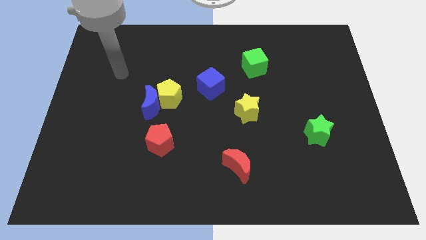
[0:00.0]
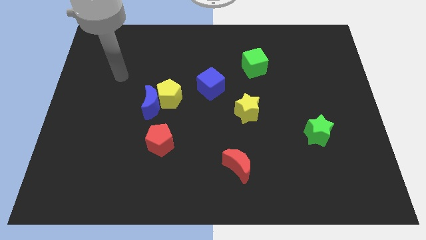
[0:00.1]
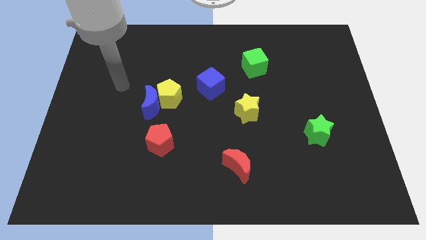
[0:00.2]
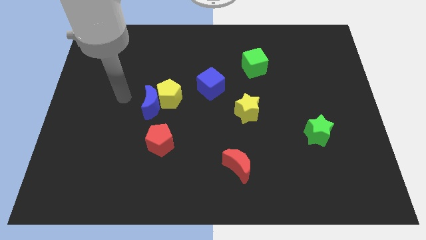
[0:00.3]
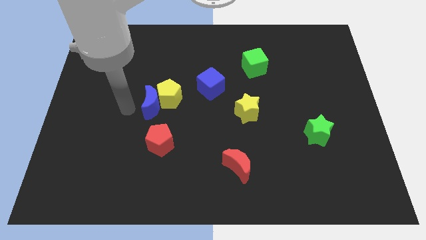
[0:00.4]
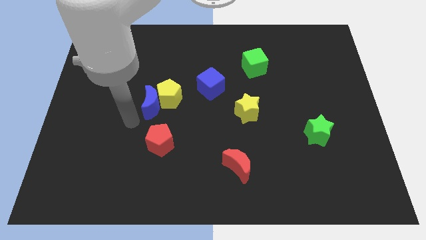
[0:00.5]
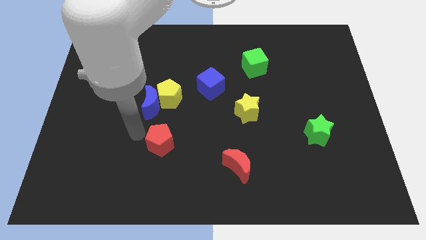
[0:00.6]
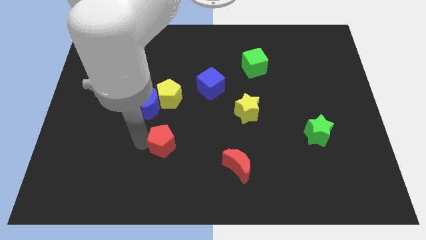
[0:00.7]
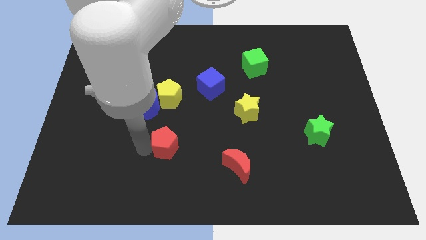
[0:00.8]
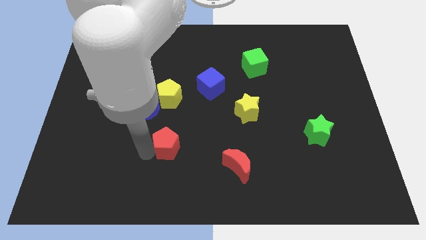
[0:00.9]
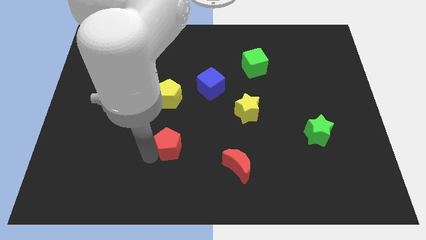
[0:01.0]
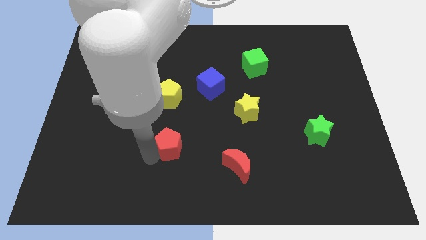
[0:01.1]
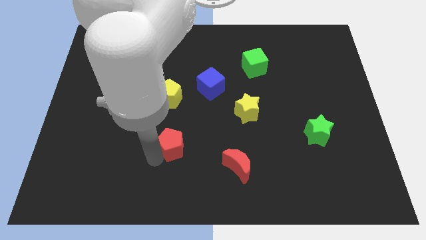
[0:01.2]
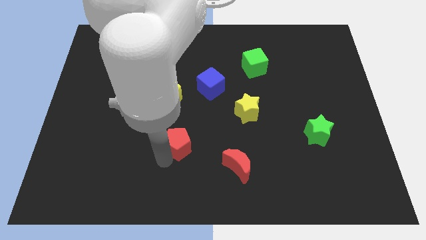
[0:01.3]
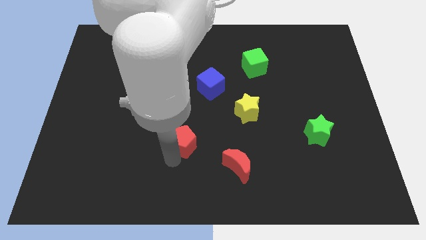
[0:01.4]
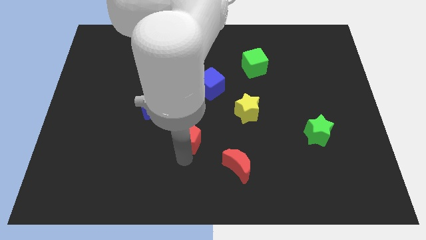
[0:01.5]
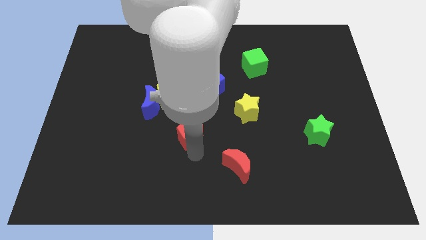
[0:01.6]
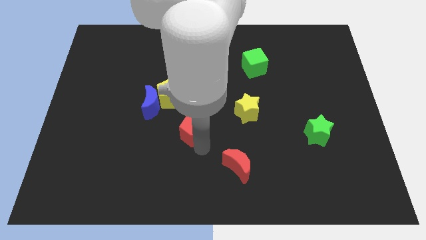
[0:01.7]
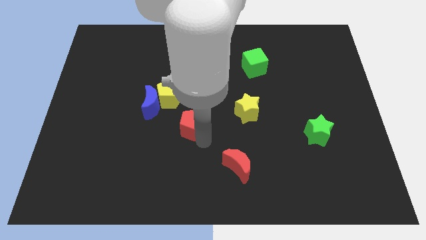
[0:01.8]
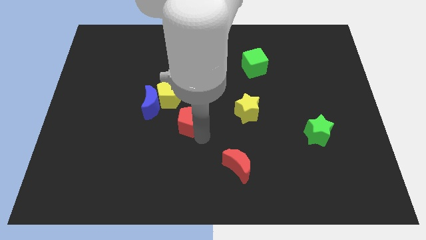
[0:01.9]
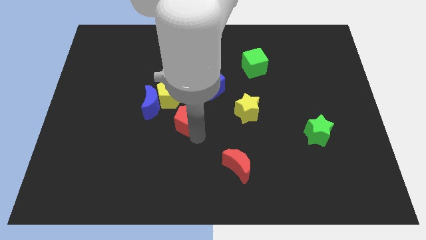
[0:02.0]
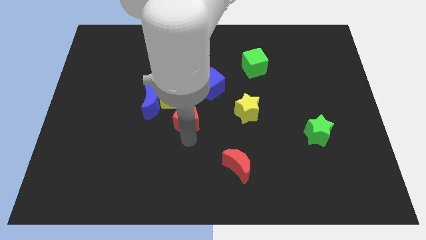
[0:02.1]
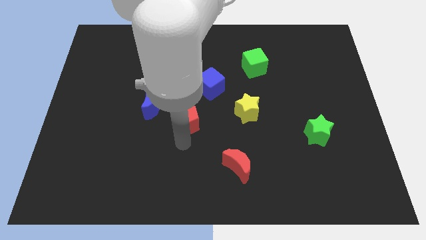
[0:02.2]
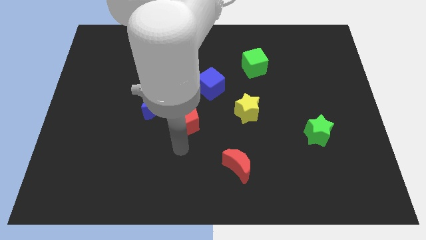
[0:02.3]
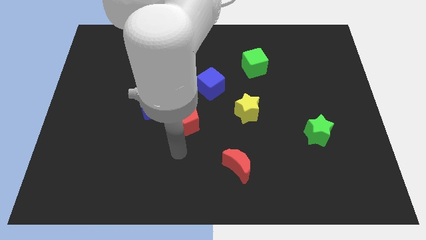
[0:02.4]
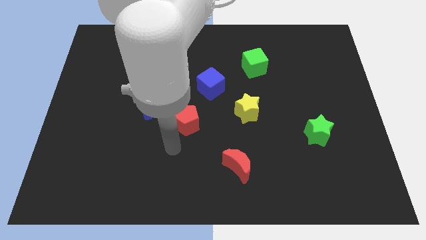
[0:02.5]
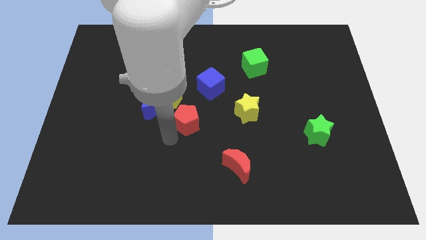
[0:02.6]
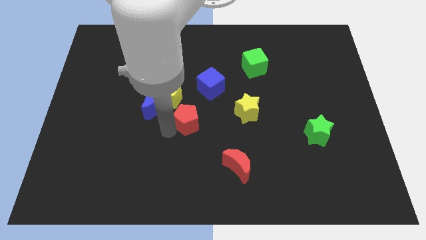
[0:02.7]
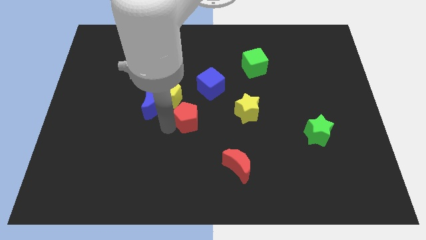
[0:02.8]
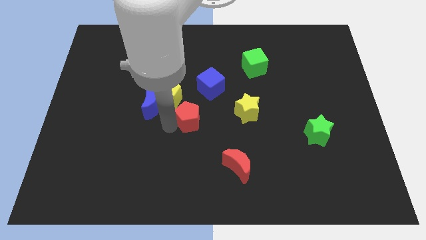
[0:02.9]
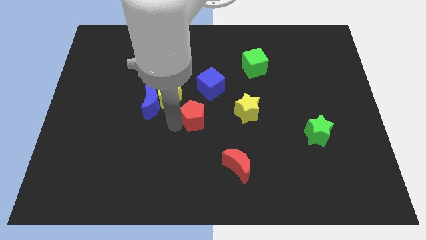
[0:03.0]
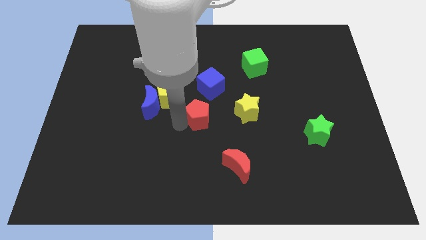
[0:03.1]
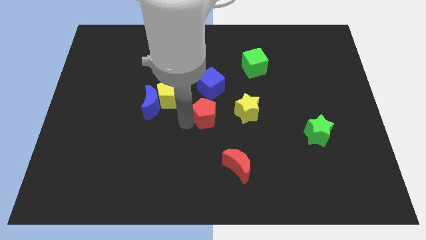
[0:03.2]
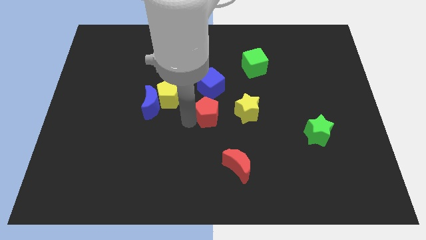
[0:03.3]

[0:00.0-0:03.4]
move red pentagon to the center of board

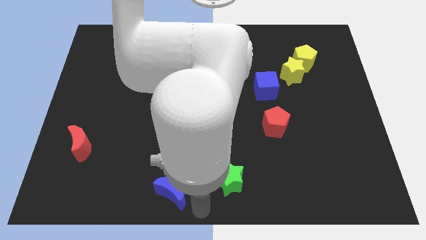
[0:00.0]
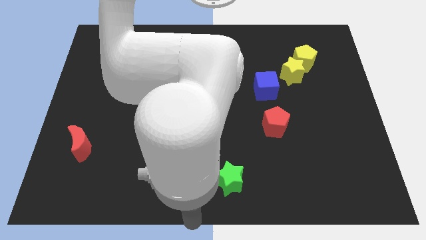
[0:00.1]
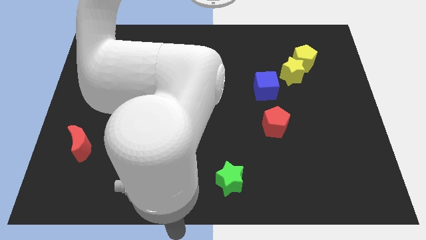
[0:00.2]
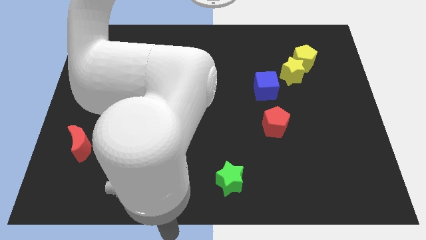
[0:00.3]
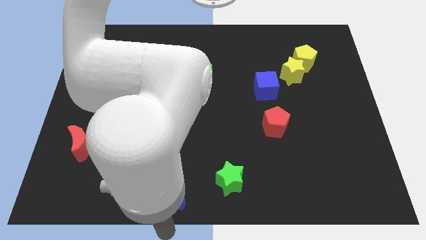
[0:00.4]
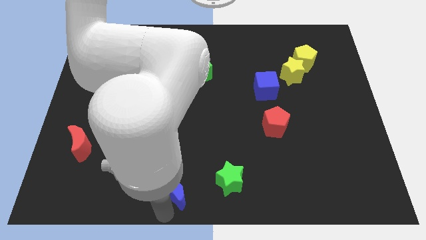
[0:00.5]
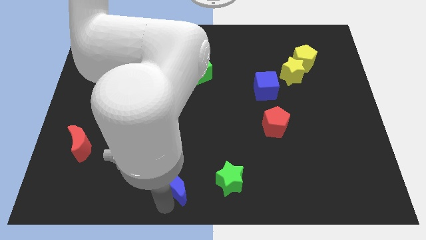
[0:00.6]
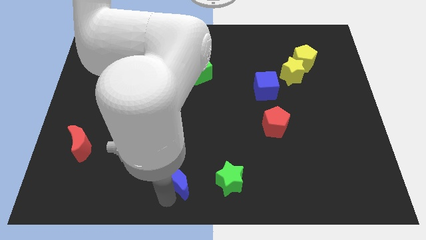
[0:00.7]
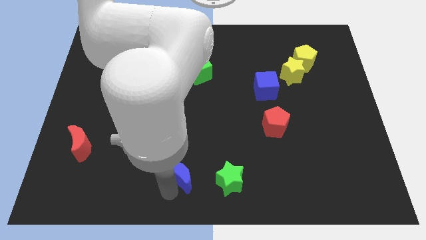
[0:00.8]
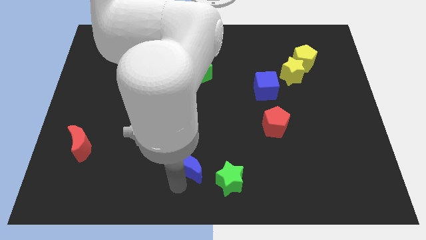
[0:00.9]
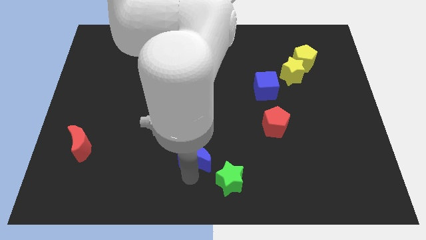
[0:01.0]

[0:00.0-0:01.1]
slide blue moon up a bit

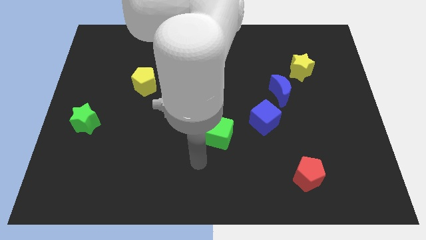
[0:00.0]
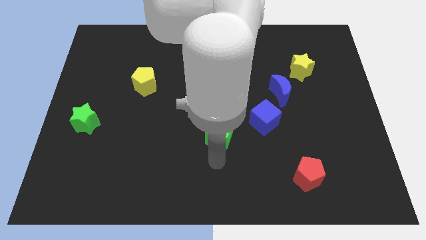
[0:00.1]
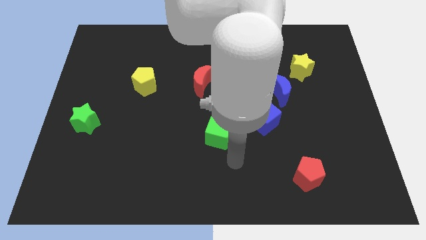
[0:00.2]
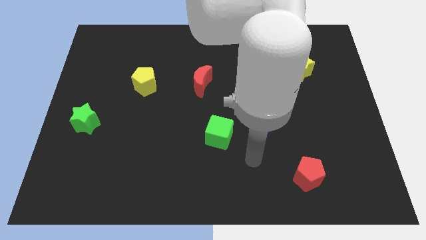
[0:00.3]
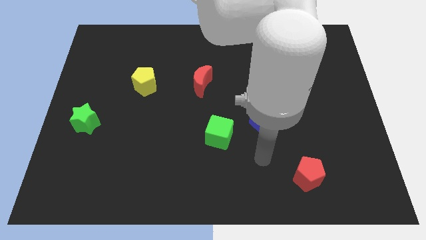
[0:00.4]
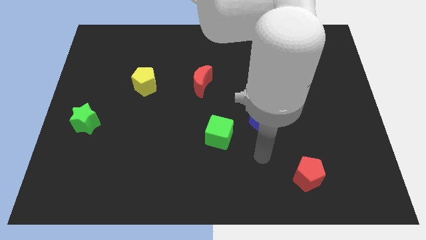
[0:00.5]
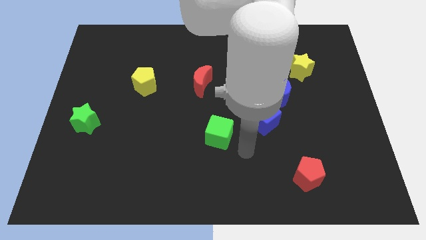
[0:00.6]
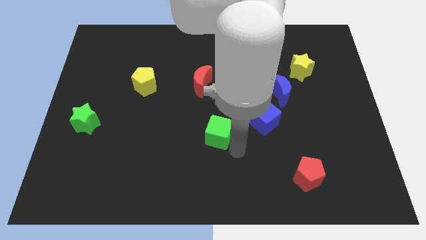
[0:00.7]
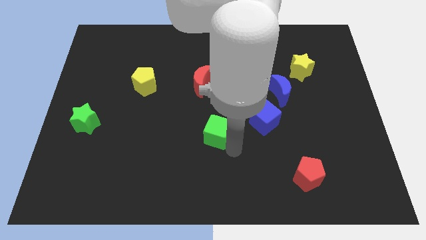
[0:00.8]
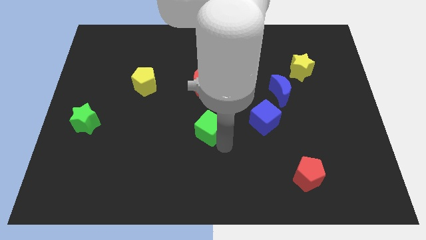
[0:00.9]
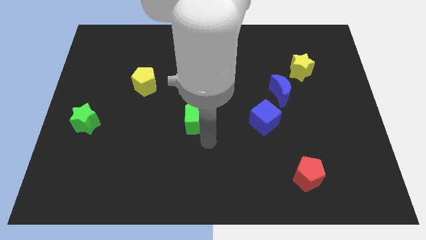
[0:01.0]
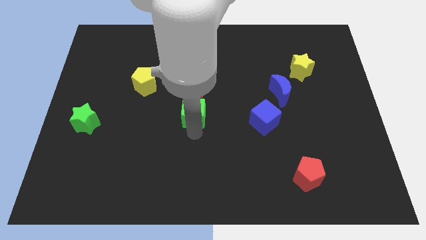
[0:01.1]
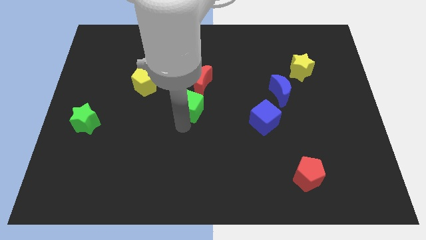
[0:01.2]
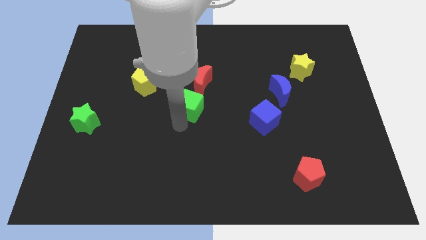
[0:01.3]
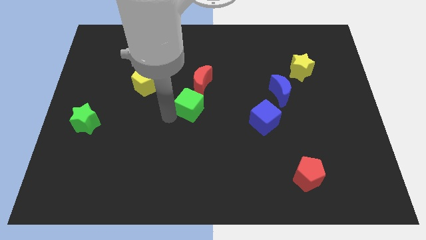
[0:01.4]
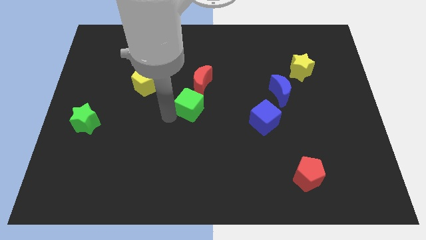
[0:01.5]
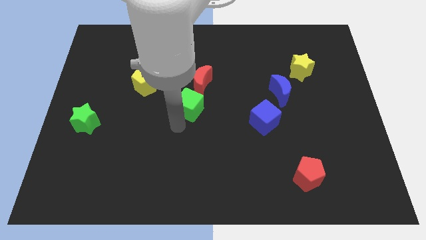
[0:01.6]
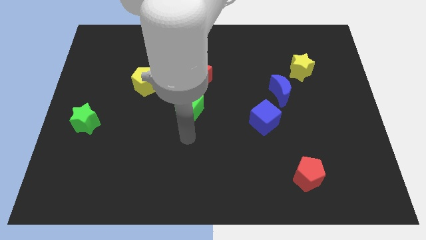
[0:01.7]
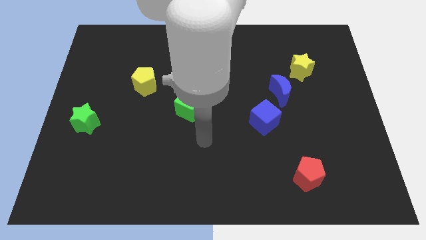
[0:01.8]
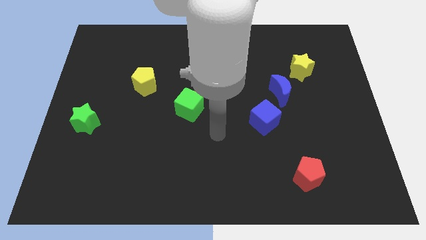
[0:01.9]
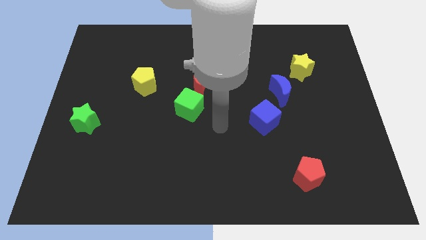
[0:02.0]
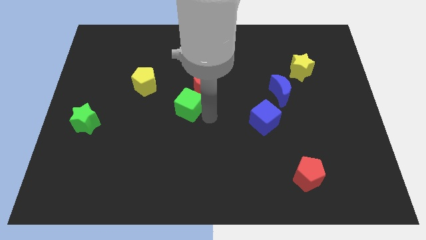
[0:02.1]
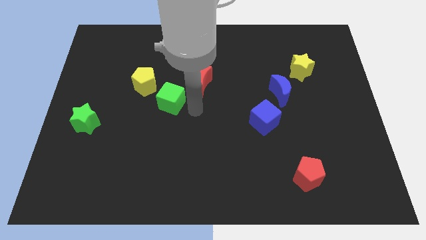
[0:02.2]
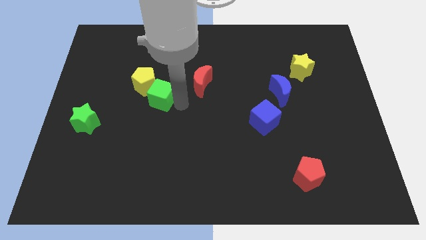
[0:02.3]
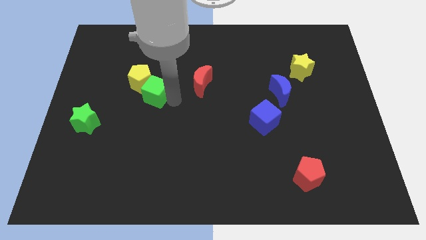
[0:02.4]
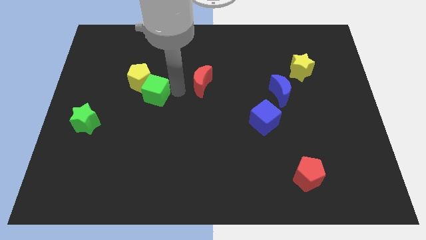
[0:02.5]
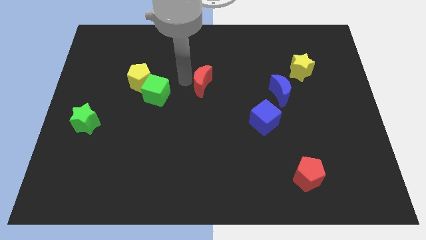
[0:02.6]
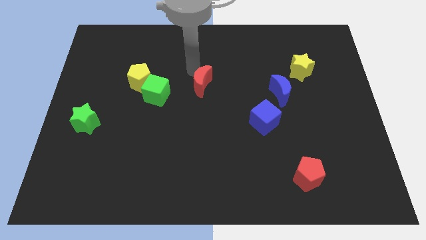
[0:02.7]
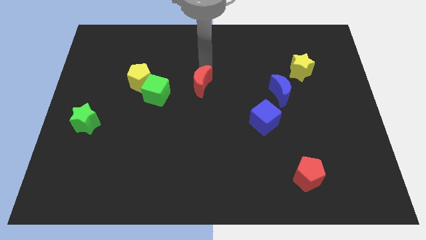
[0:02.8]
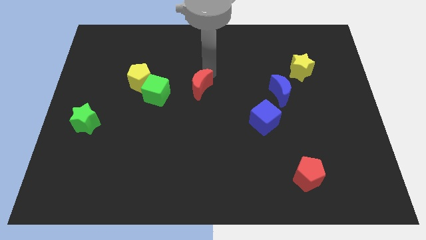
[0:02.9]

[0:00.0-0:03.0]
move the green cube into the yellow pentagon diagonally

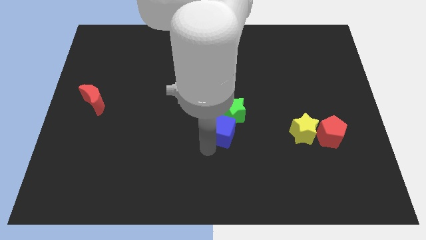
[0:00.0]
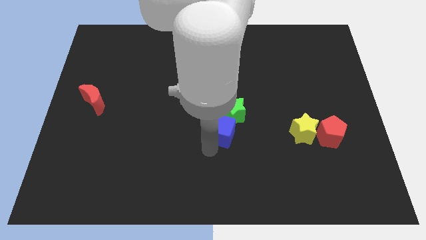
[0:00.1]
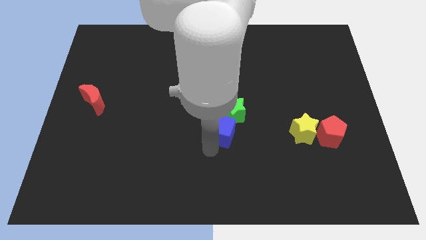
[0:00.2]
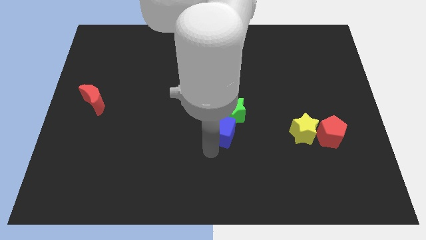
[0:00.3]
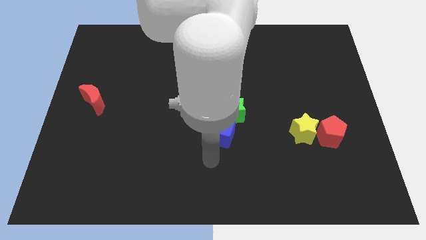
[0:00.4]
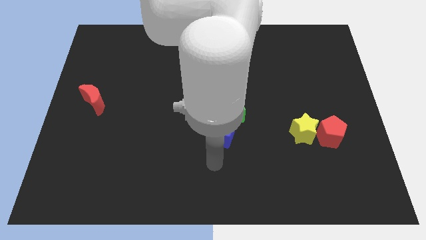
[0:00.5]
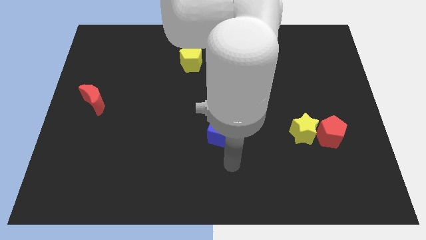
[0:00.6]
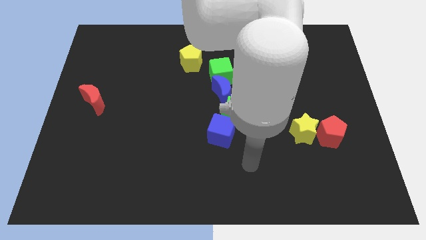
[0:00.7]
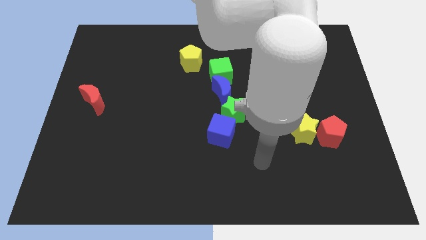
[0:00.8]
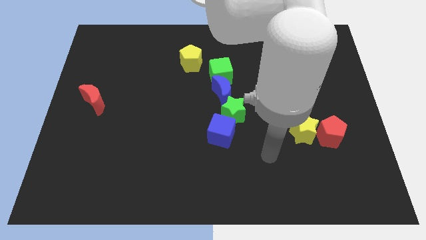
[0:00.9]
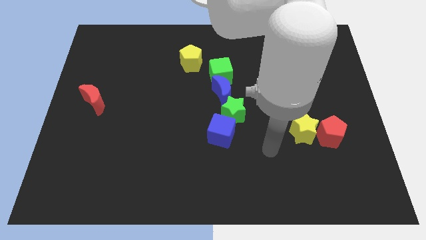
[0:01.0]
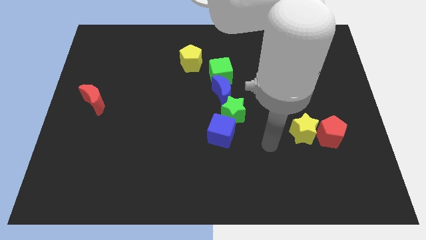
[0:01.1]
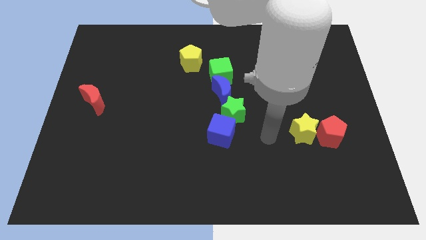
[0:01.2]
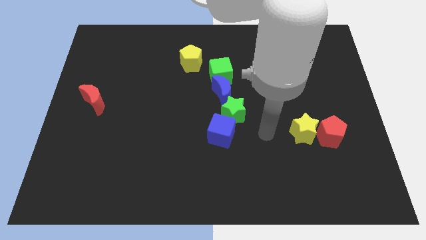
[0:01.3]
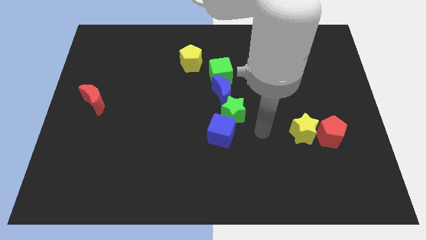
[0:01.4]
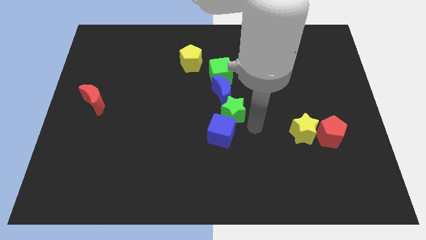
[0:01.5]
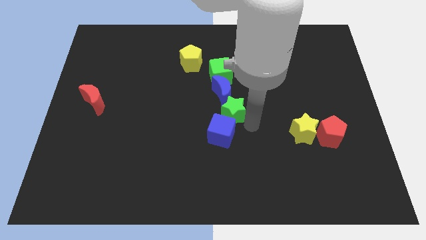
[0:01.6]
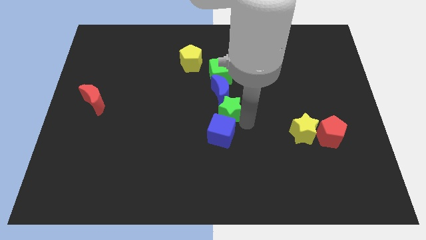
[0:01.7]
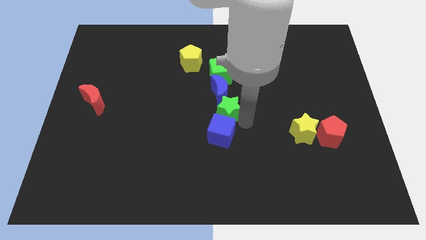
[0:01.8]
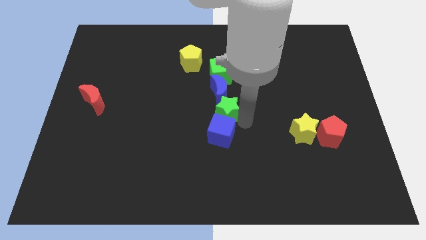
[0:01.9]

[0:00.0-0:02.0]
drag your arm towards green star
